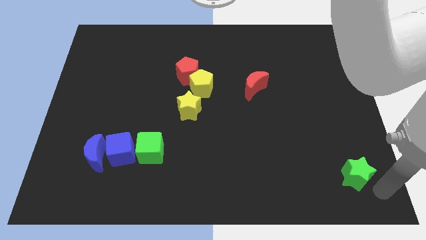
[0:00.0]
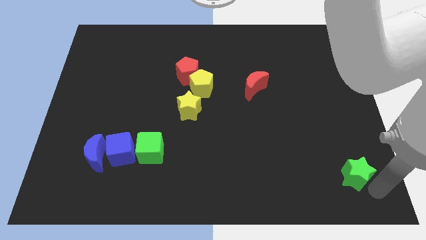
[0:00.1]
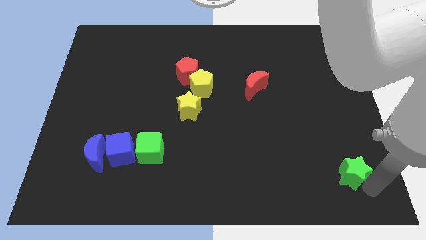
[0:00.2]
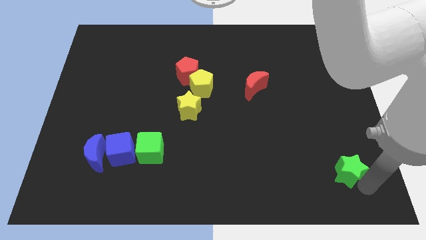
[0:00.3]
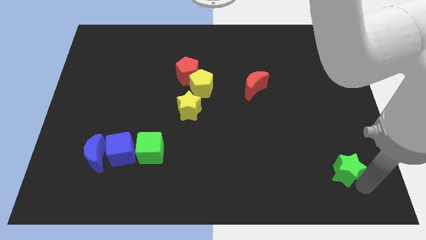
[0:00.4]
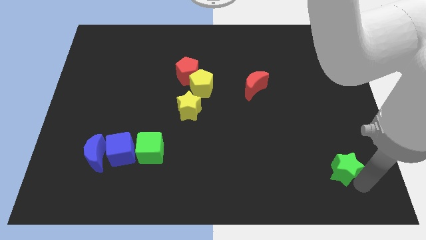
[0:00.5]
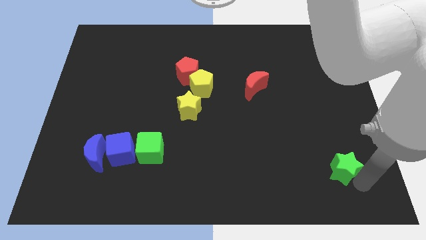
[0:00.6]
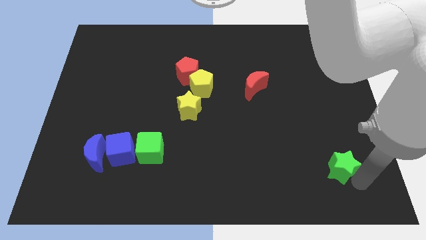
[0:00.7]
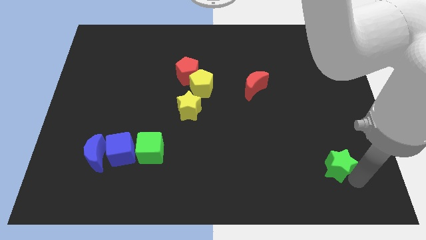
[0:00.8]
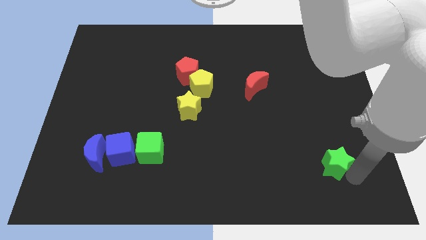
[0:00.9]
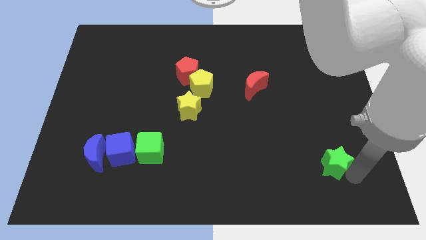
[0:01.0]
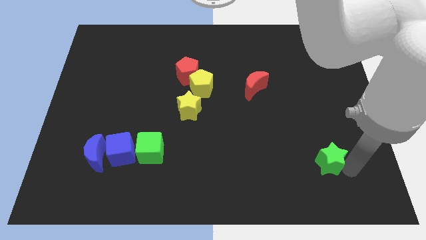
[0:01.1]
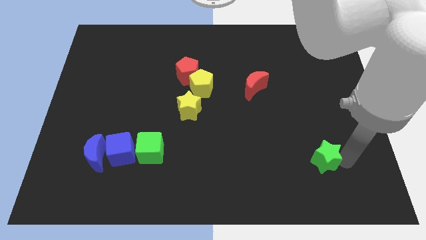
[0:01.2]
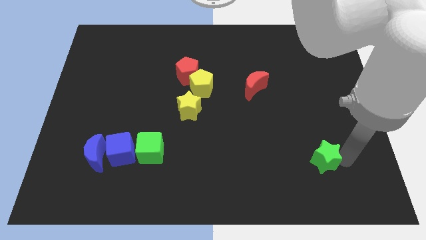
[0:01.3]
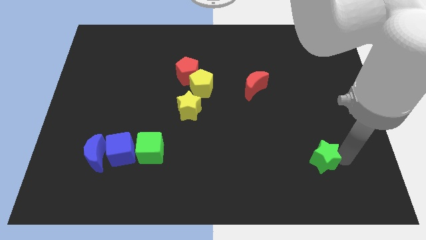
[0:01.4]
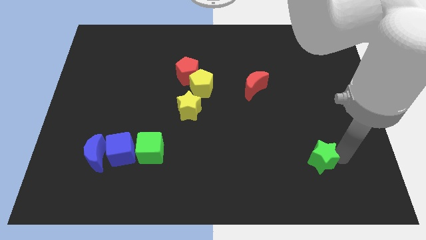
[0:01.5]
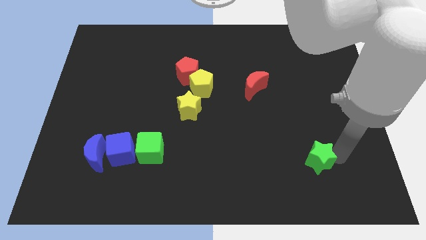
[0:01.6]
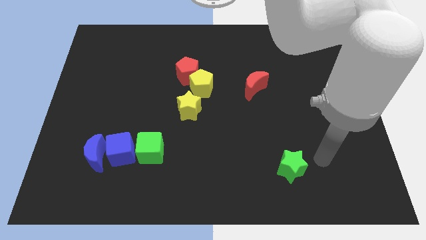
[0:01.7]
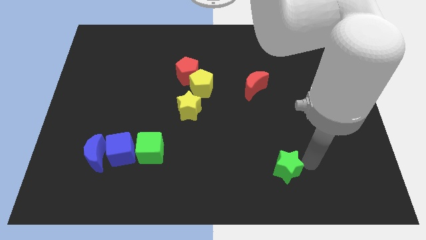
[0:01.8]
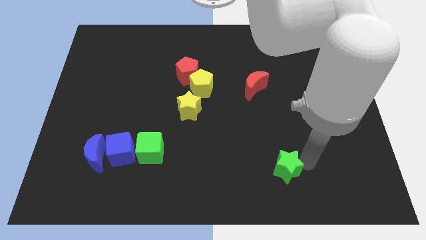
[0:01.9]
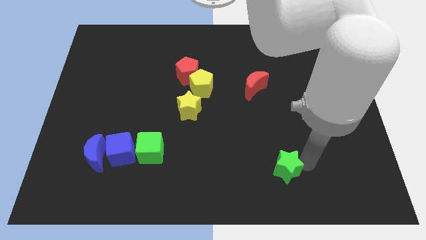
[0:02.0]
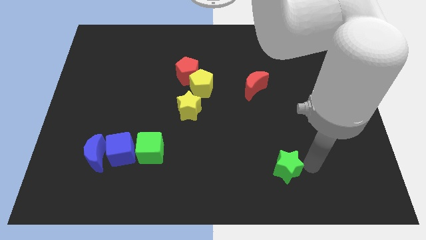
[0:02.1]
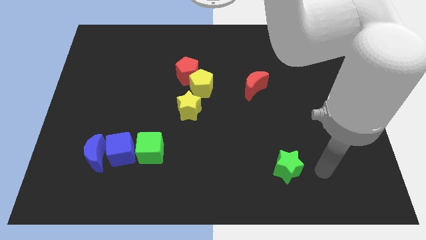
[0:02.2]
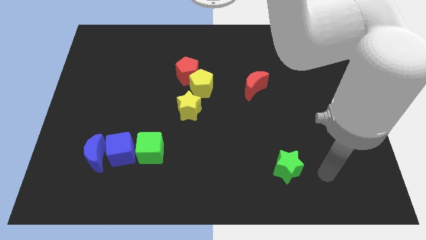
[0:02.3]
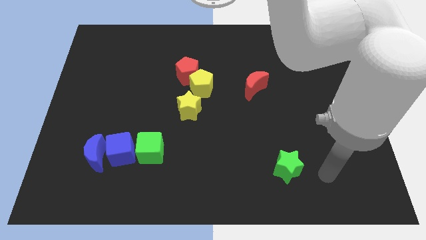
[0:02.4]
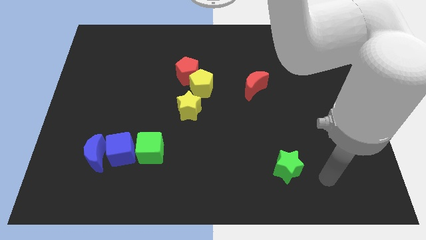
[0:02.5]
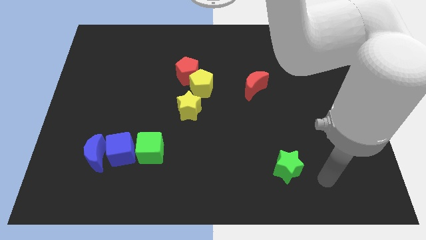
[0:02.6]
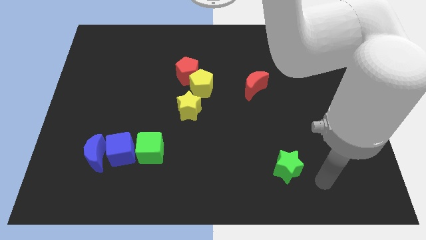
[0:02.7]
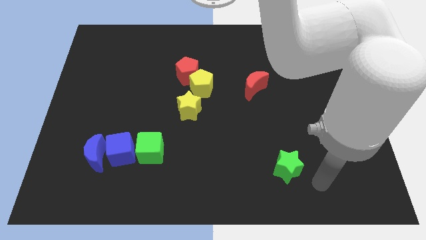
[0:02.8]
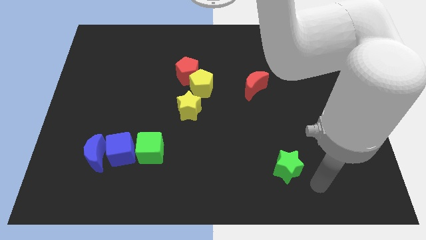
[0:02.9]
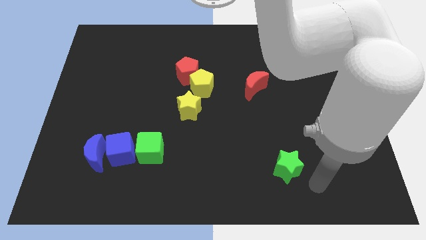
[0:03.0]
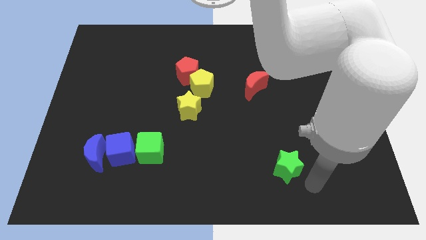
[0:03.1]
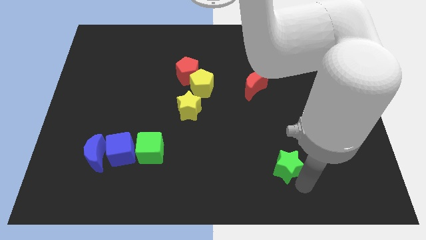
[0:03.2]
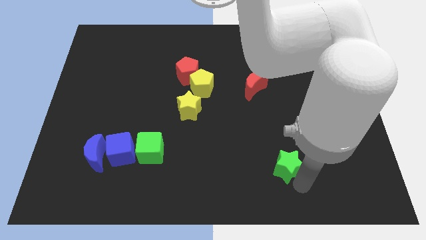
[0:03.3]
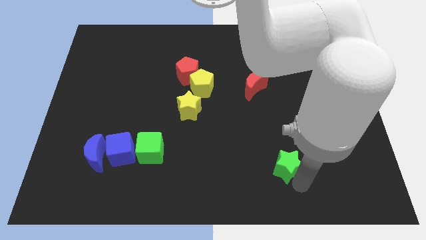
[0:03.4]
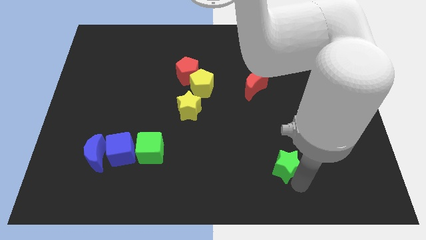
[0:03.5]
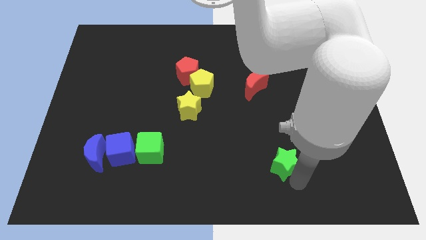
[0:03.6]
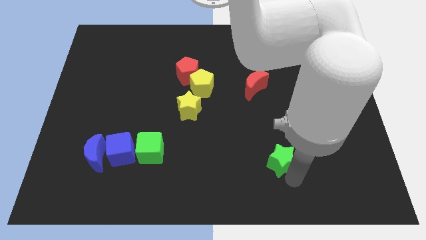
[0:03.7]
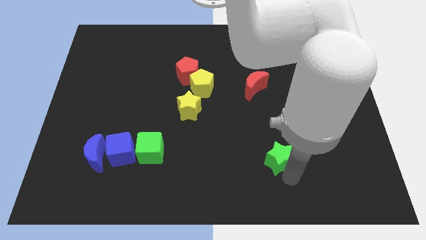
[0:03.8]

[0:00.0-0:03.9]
push the green star slightly towards the left

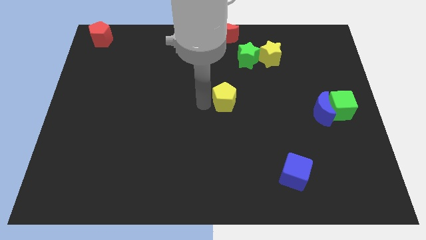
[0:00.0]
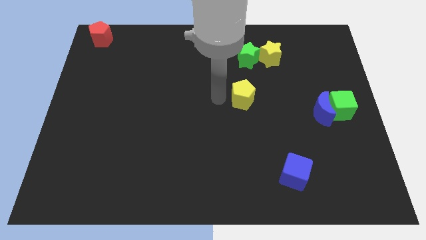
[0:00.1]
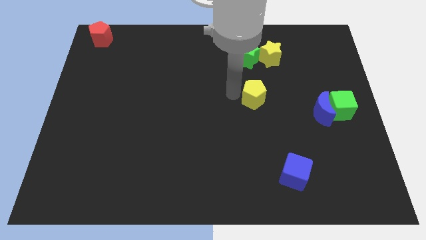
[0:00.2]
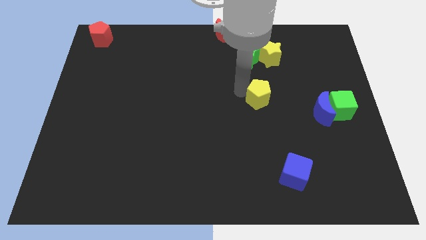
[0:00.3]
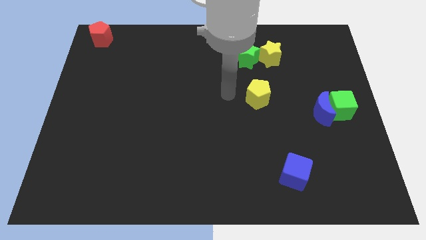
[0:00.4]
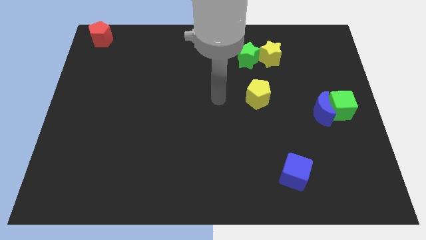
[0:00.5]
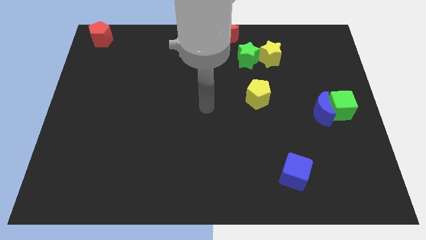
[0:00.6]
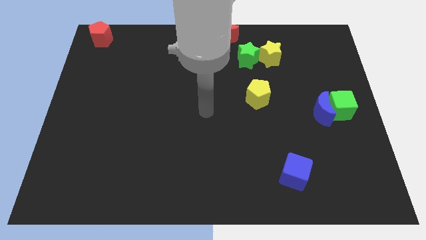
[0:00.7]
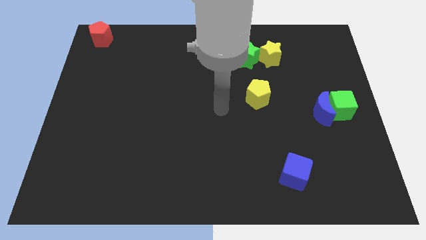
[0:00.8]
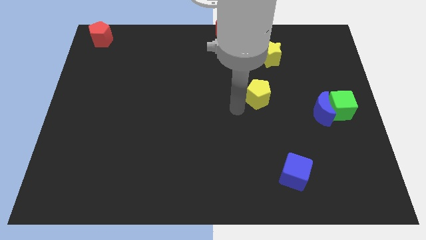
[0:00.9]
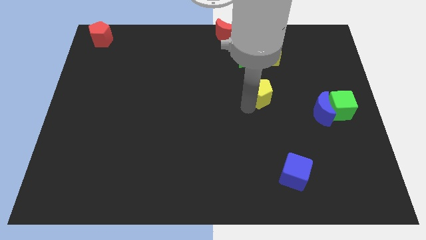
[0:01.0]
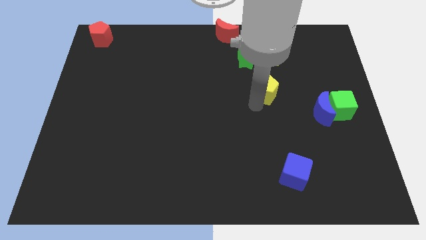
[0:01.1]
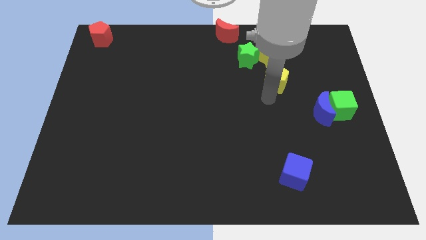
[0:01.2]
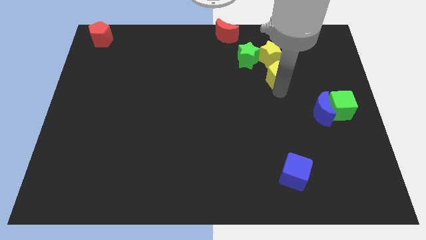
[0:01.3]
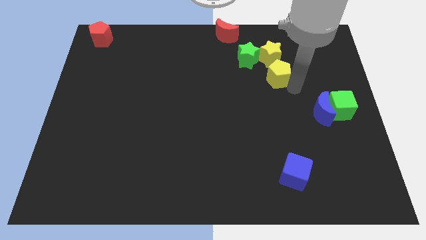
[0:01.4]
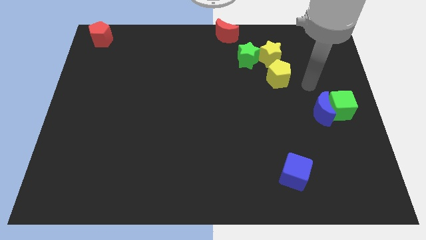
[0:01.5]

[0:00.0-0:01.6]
move the yellow pentagon down to the yellow star

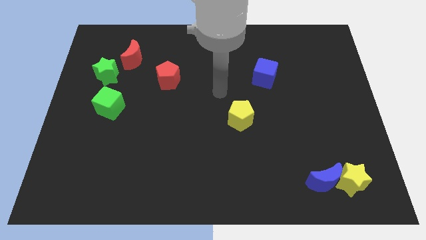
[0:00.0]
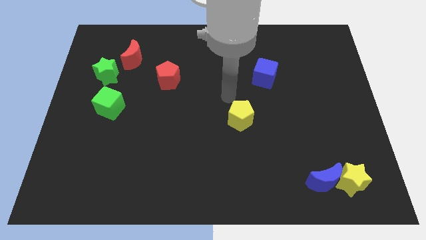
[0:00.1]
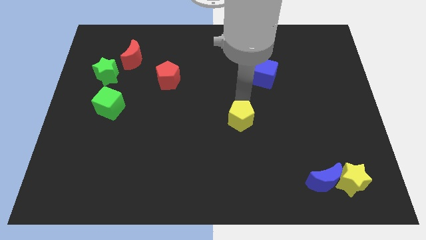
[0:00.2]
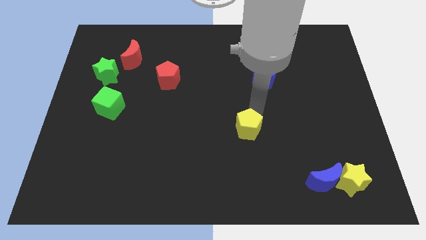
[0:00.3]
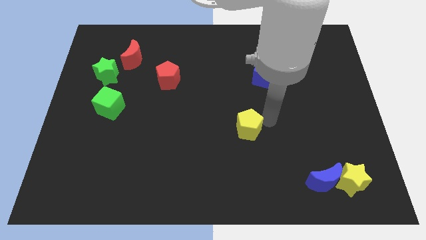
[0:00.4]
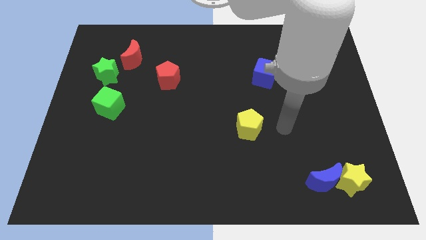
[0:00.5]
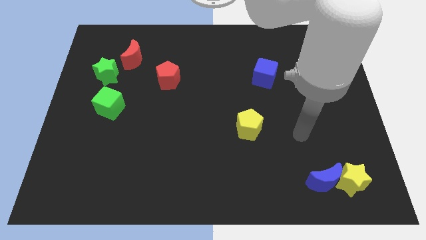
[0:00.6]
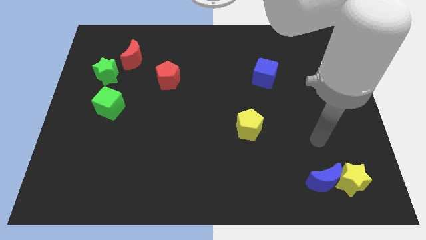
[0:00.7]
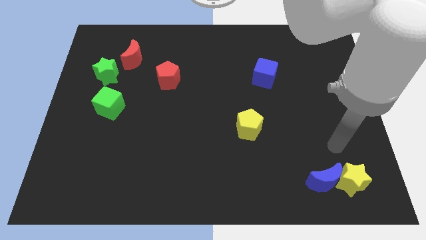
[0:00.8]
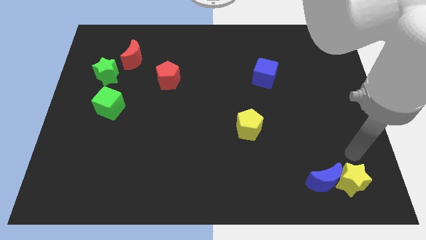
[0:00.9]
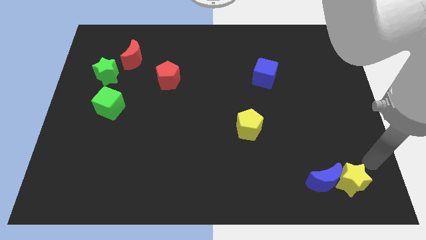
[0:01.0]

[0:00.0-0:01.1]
slightly move the yellow pentagon to the left of the board

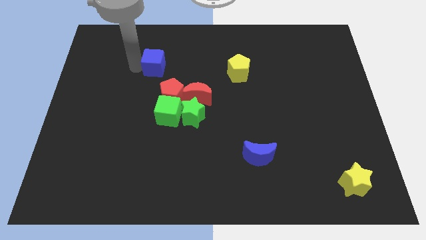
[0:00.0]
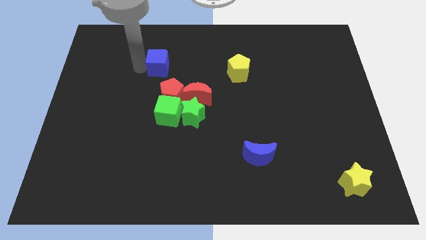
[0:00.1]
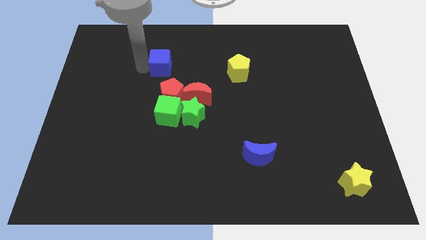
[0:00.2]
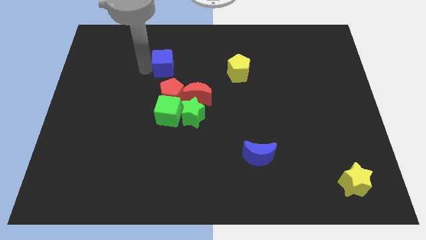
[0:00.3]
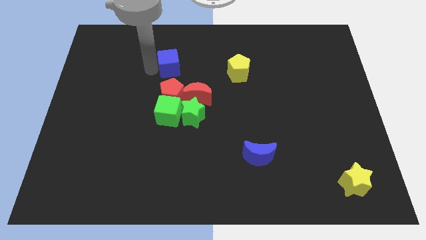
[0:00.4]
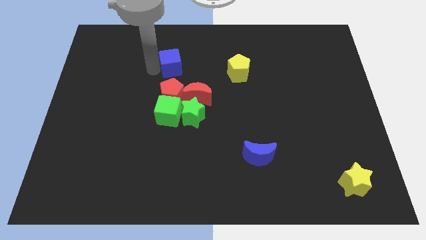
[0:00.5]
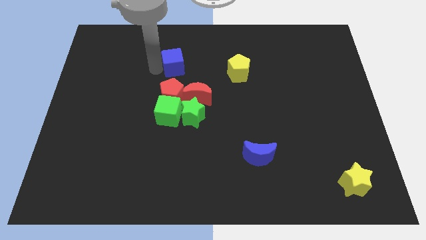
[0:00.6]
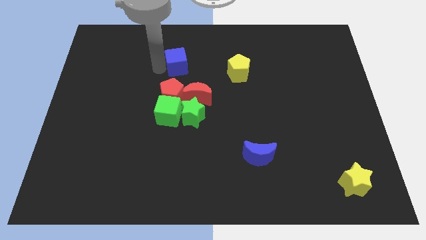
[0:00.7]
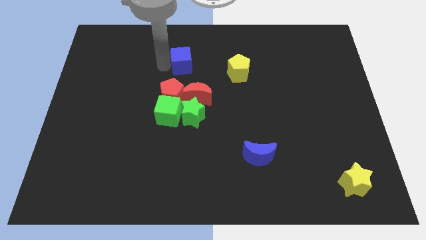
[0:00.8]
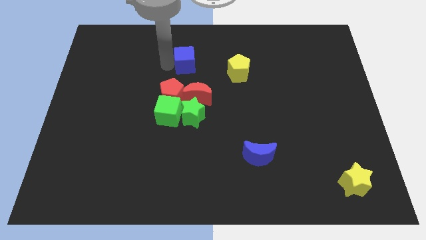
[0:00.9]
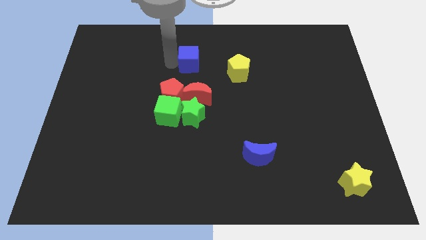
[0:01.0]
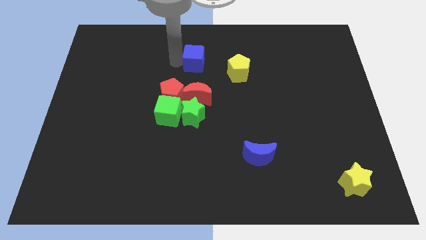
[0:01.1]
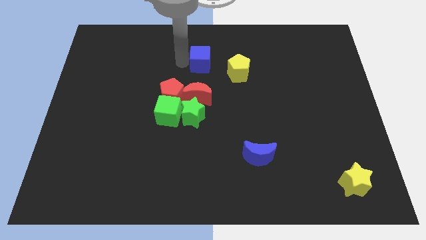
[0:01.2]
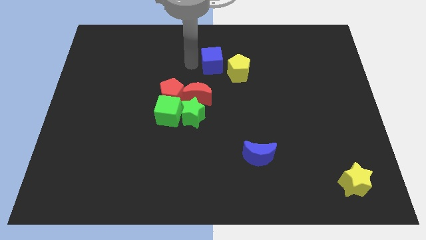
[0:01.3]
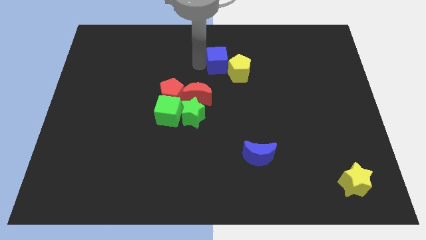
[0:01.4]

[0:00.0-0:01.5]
move the blue cube into yellow pentagon

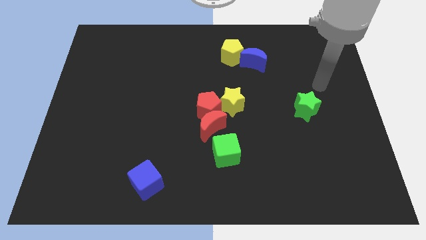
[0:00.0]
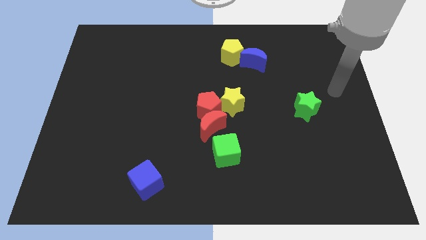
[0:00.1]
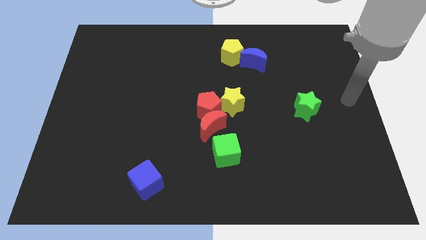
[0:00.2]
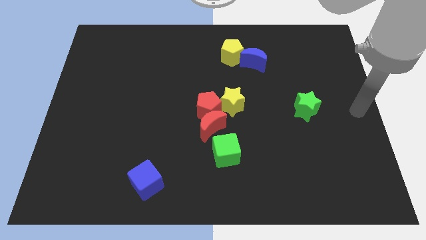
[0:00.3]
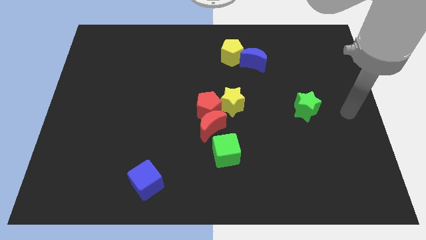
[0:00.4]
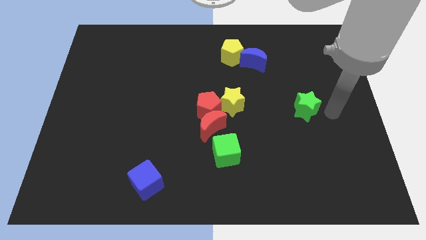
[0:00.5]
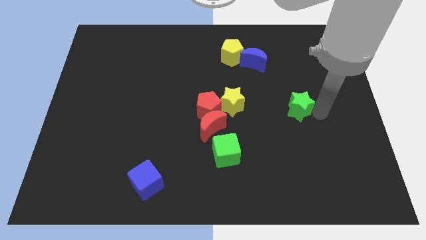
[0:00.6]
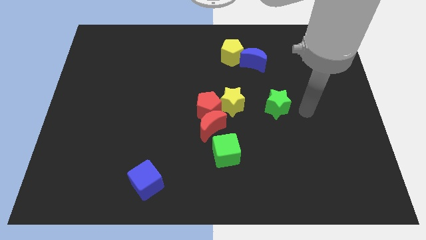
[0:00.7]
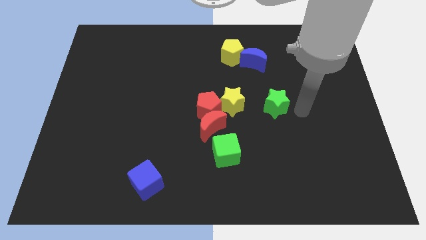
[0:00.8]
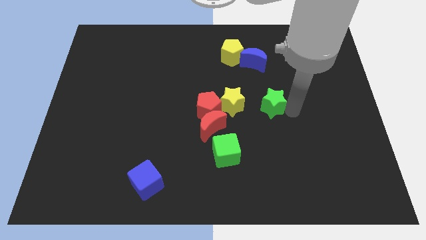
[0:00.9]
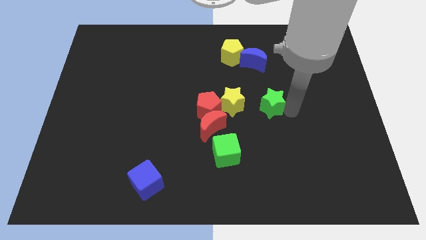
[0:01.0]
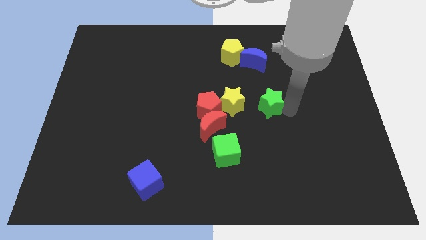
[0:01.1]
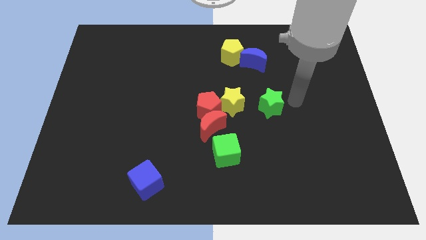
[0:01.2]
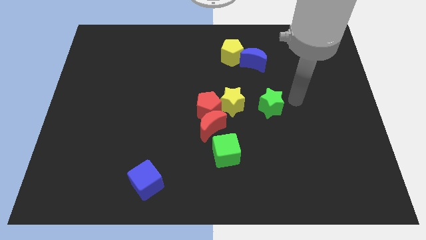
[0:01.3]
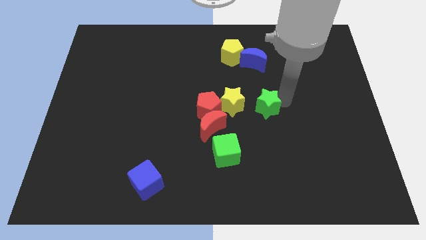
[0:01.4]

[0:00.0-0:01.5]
move green star close to yellow star
